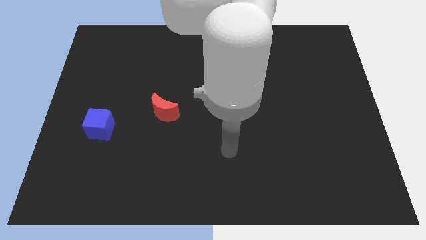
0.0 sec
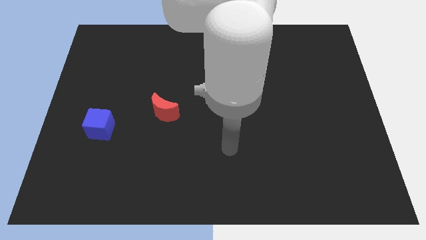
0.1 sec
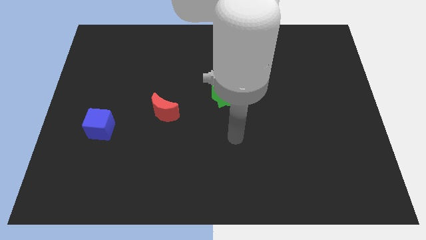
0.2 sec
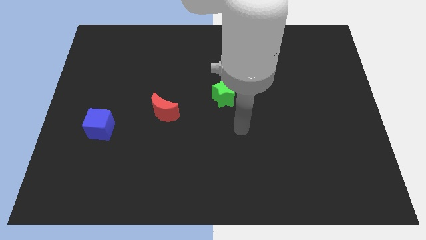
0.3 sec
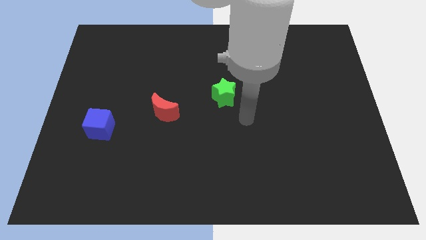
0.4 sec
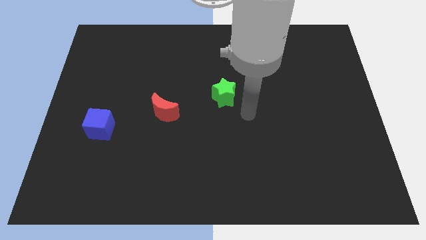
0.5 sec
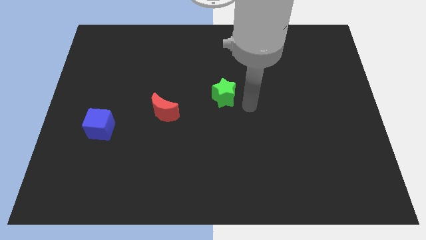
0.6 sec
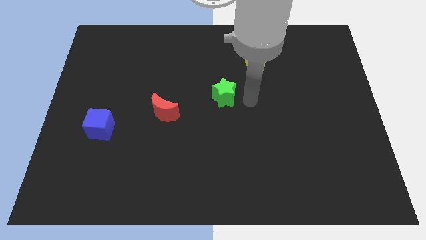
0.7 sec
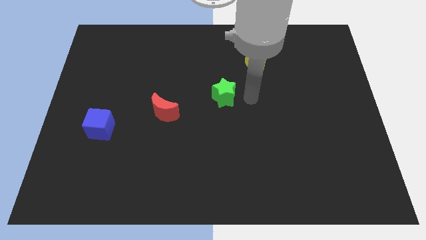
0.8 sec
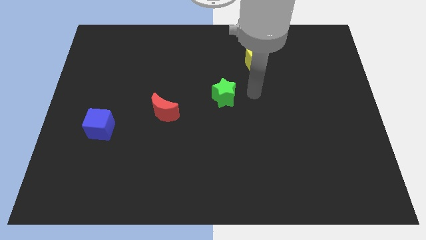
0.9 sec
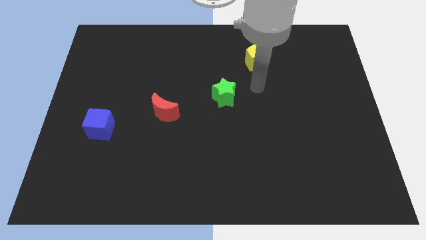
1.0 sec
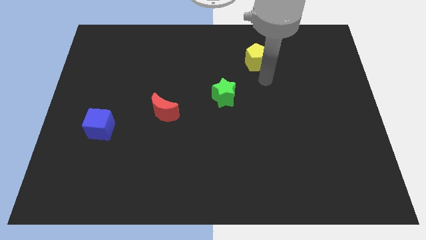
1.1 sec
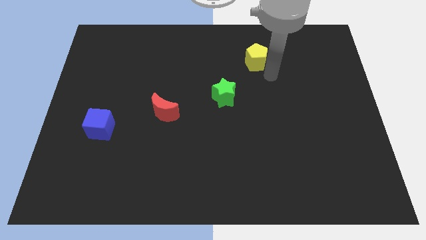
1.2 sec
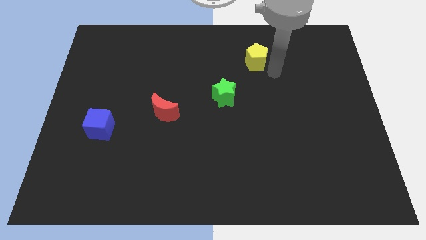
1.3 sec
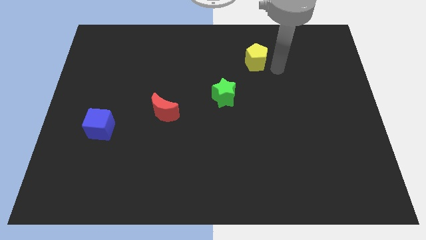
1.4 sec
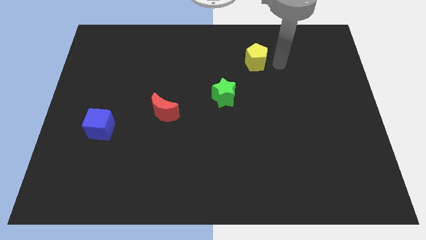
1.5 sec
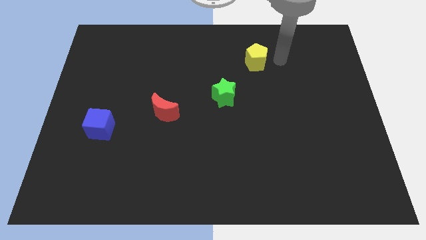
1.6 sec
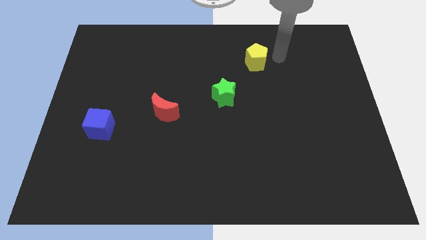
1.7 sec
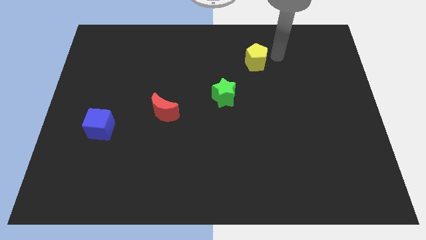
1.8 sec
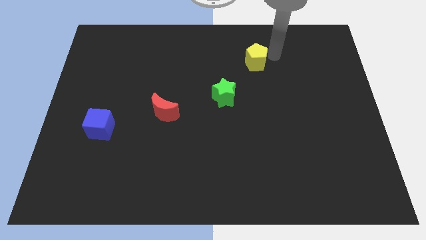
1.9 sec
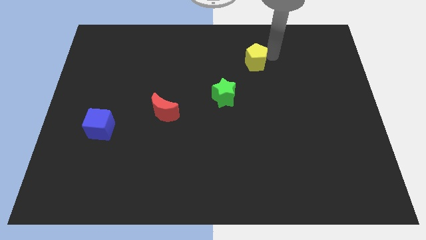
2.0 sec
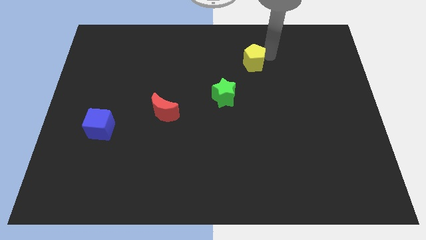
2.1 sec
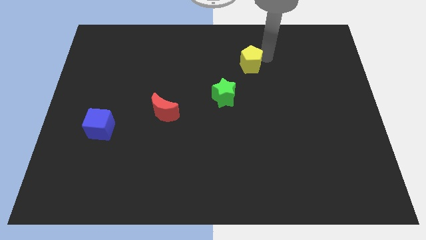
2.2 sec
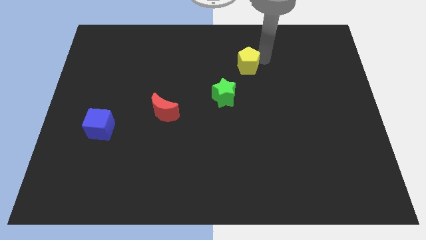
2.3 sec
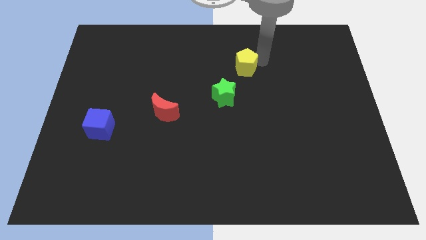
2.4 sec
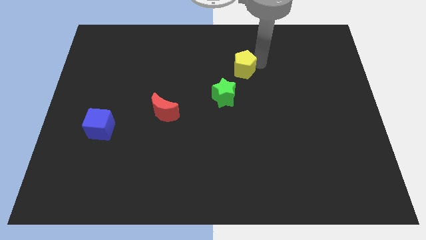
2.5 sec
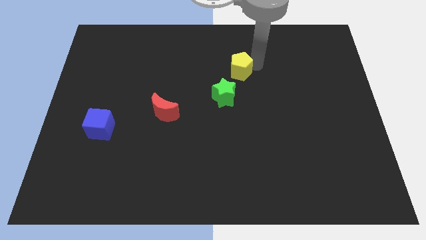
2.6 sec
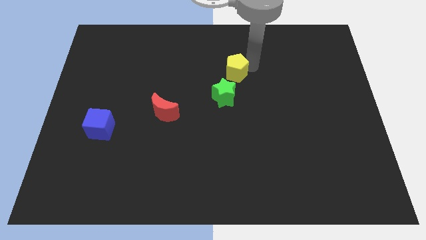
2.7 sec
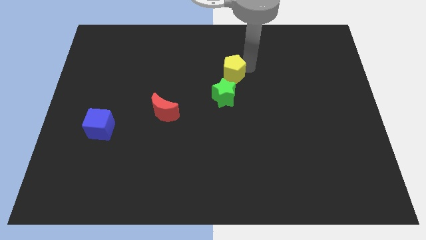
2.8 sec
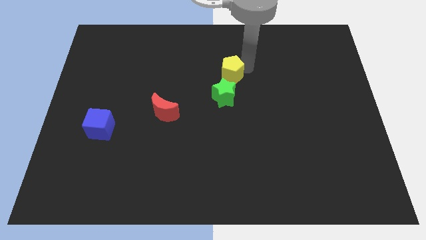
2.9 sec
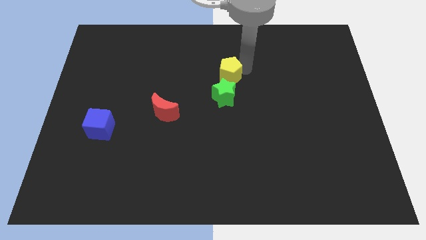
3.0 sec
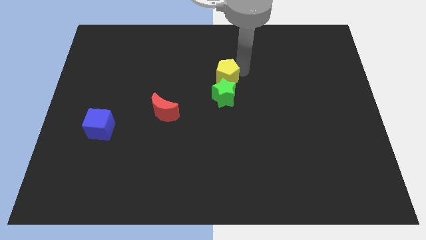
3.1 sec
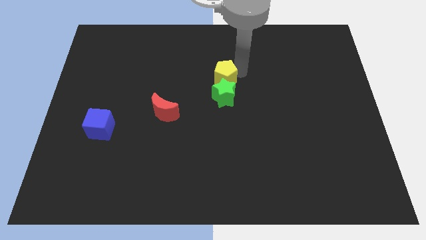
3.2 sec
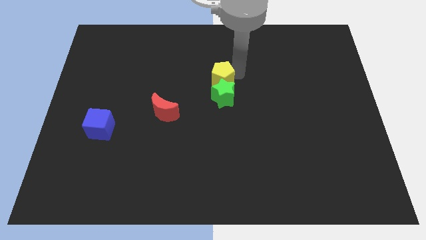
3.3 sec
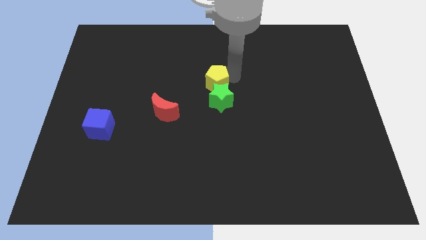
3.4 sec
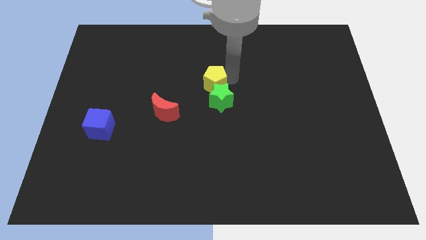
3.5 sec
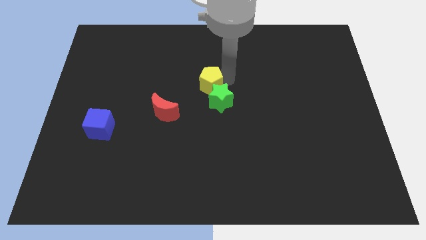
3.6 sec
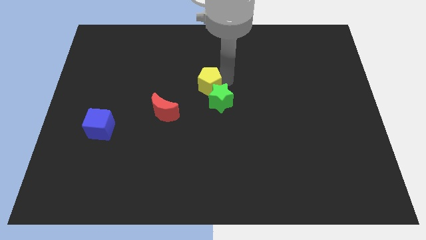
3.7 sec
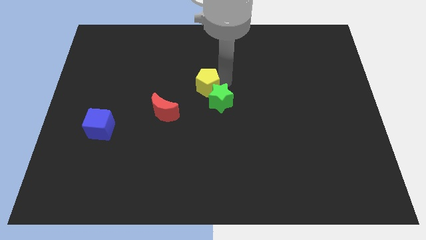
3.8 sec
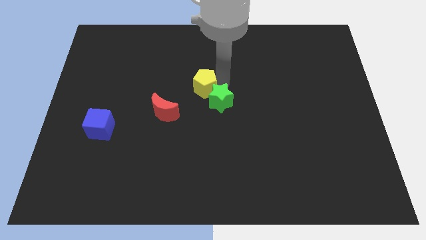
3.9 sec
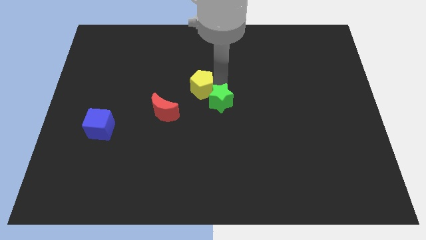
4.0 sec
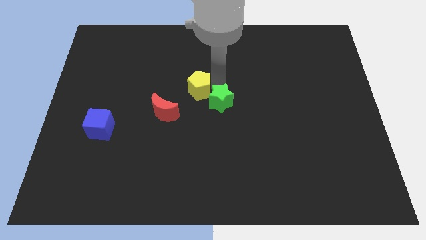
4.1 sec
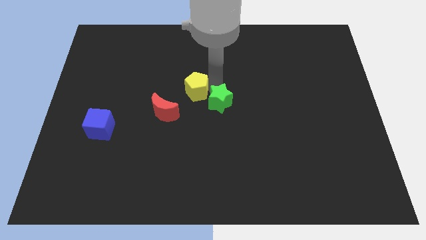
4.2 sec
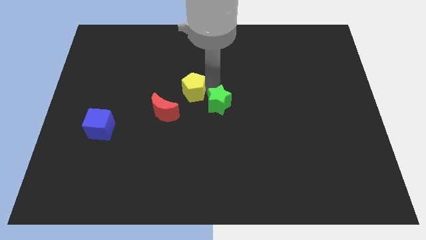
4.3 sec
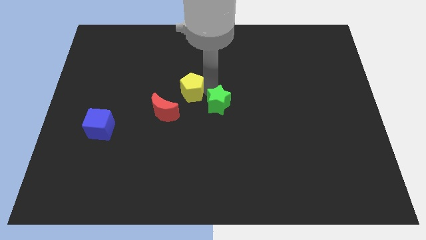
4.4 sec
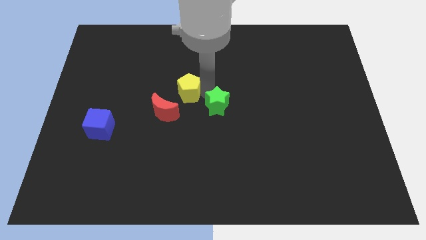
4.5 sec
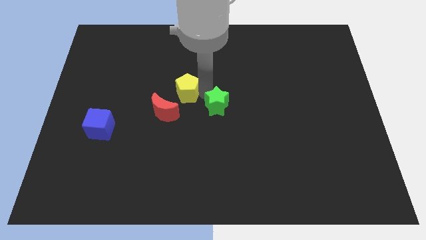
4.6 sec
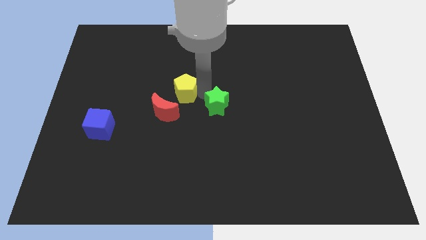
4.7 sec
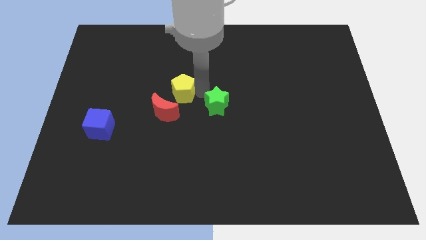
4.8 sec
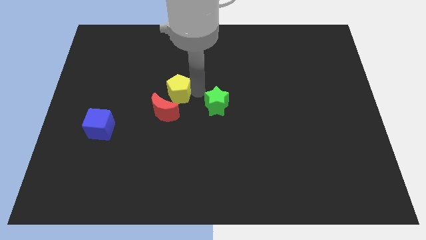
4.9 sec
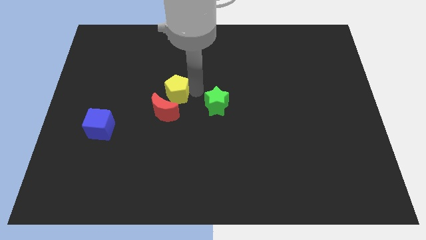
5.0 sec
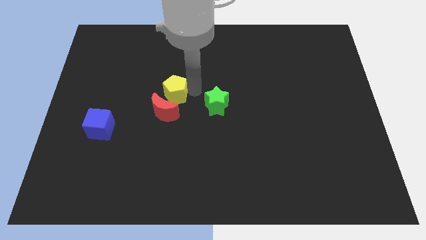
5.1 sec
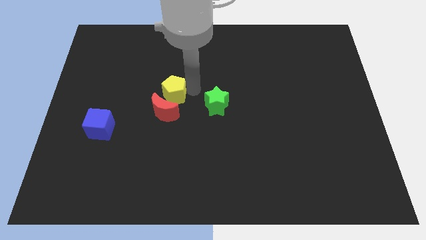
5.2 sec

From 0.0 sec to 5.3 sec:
put the yellow block next to the red block

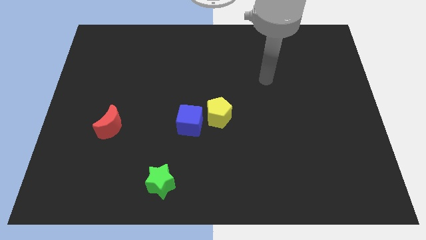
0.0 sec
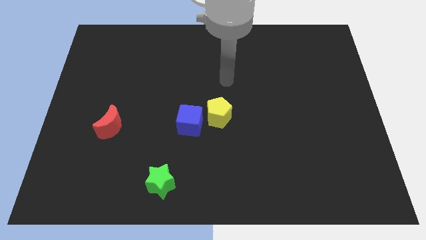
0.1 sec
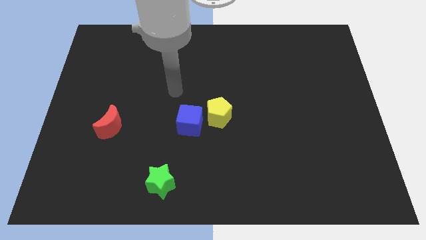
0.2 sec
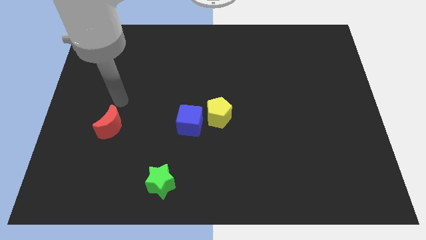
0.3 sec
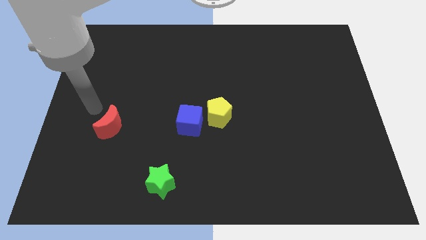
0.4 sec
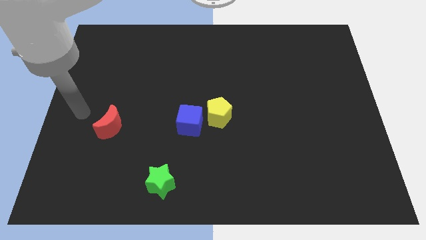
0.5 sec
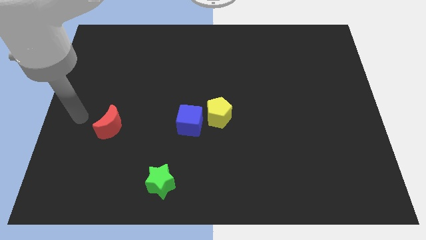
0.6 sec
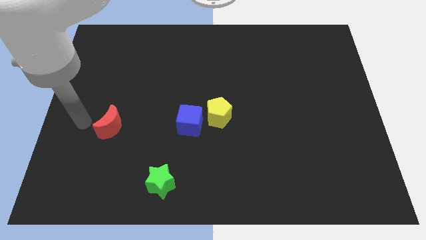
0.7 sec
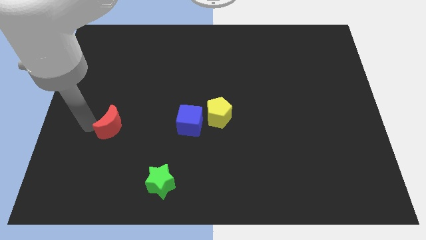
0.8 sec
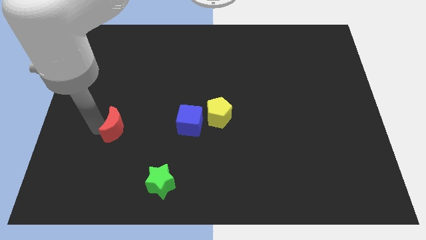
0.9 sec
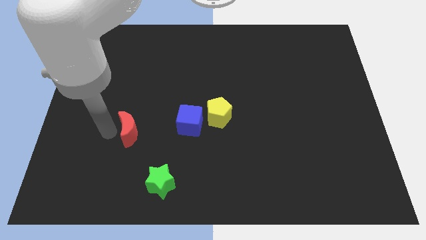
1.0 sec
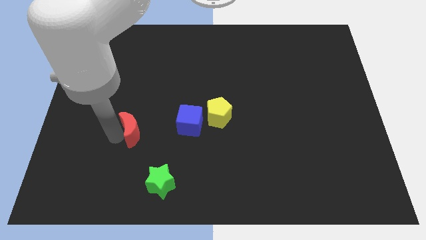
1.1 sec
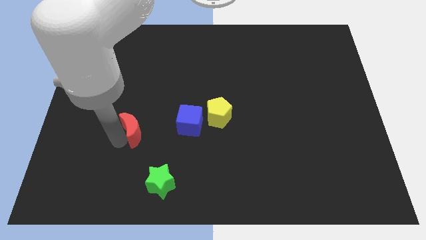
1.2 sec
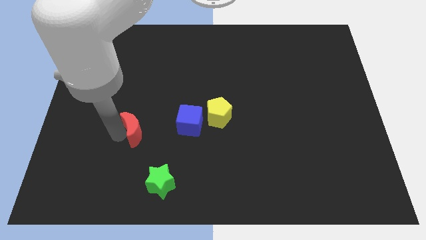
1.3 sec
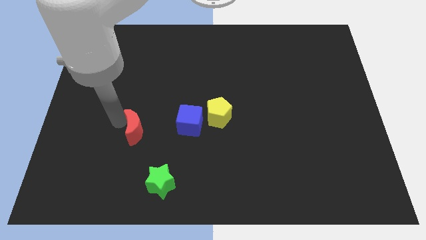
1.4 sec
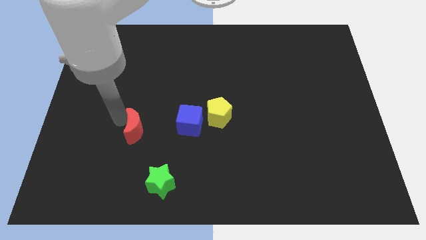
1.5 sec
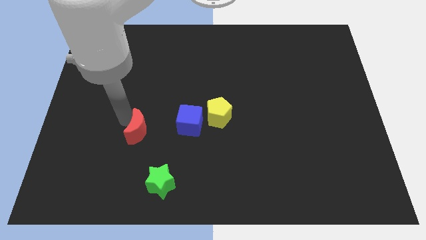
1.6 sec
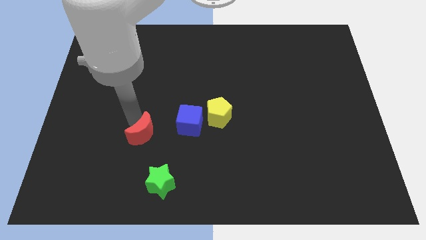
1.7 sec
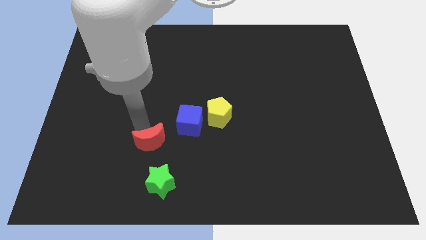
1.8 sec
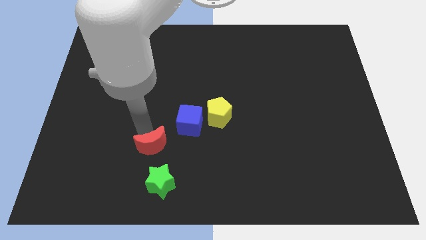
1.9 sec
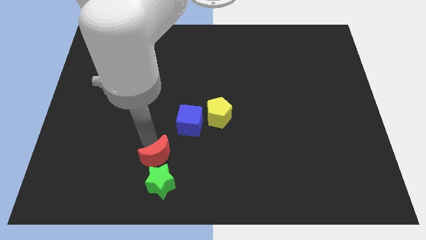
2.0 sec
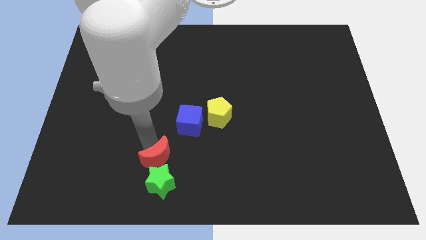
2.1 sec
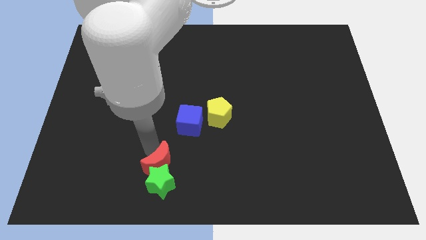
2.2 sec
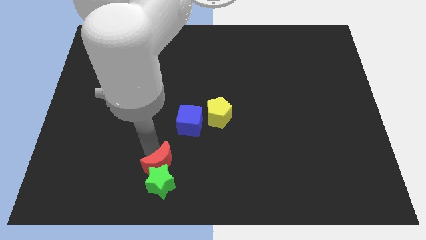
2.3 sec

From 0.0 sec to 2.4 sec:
put the red block towards the star

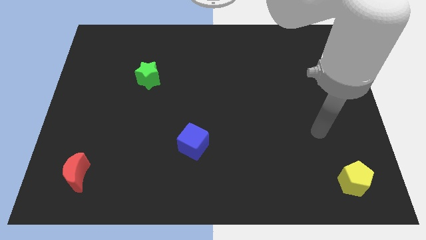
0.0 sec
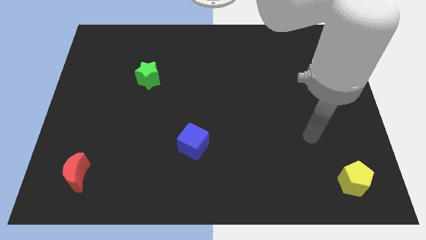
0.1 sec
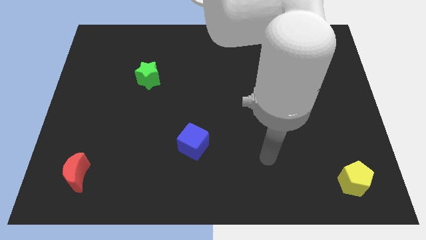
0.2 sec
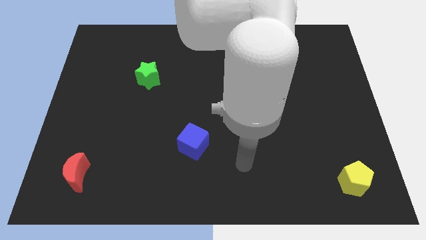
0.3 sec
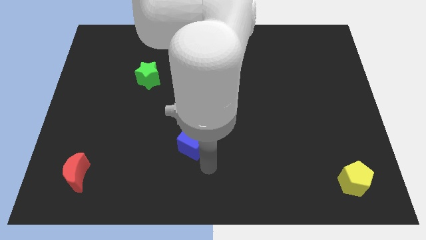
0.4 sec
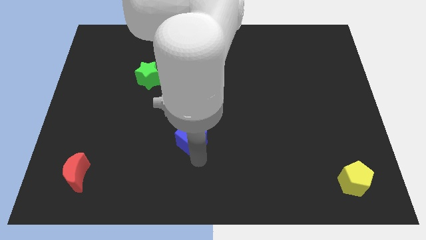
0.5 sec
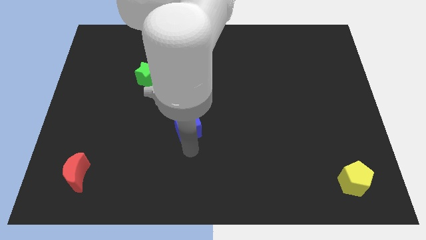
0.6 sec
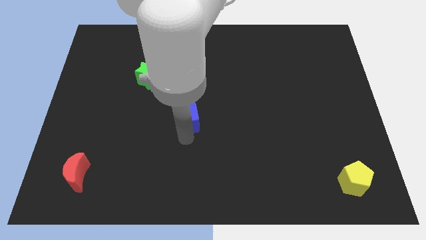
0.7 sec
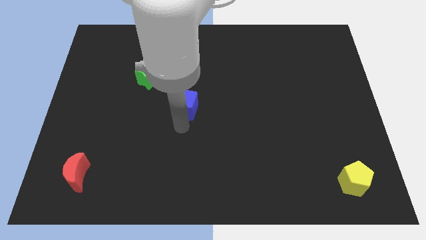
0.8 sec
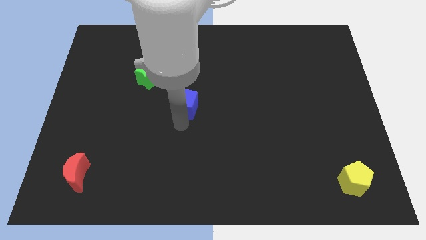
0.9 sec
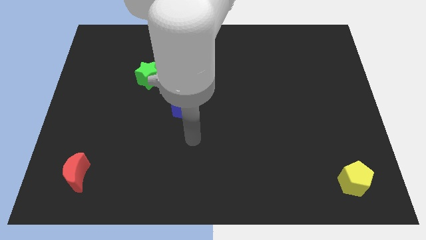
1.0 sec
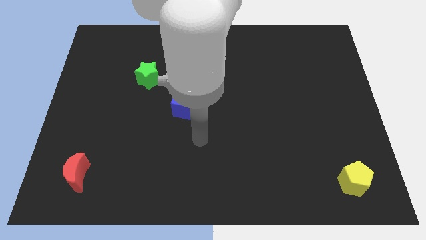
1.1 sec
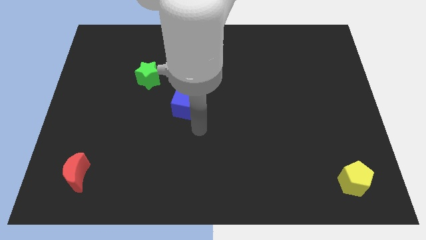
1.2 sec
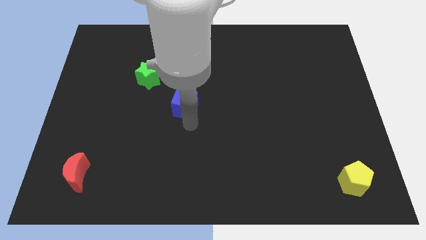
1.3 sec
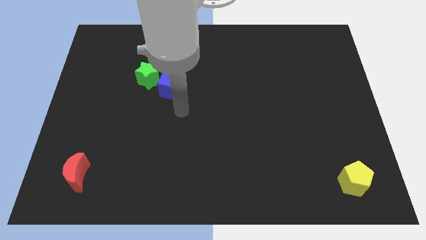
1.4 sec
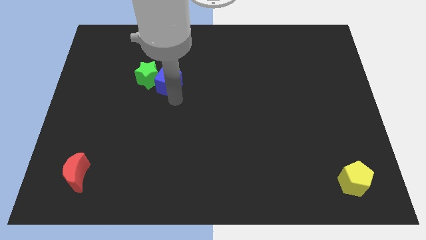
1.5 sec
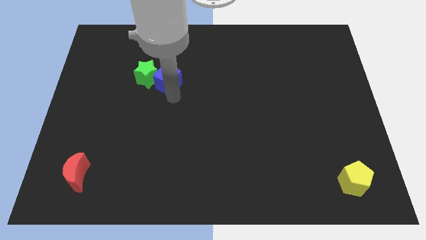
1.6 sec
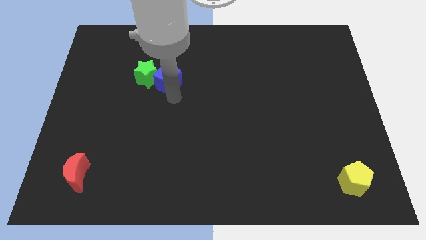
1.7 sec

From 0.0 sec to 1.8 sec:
push the blue block to the green star
